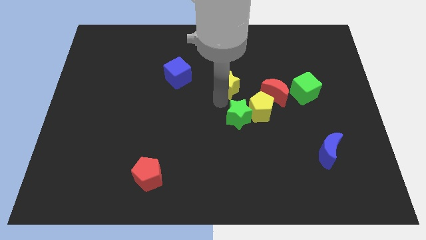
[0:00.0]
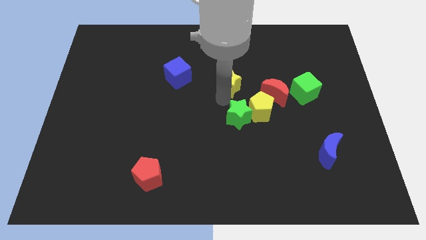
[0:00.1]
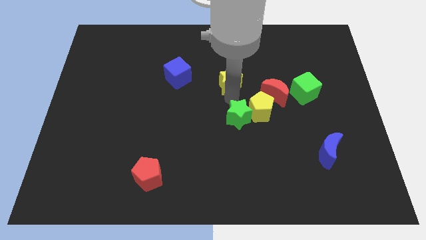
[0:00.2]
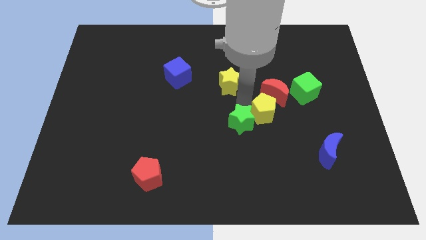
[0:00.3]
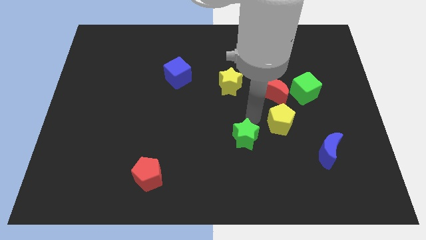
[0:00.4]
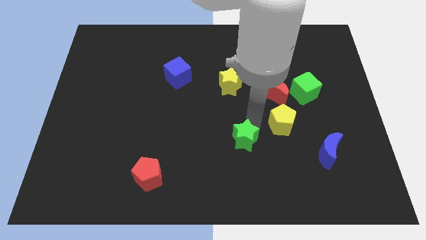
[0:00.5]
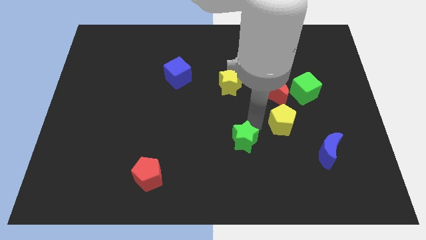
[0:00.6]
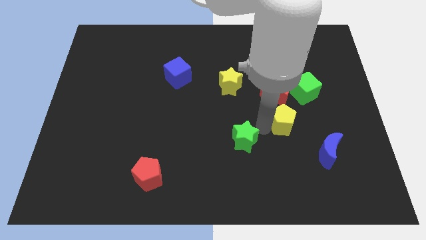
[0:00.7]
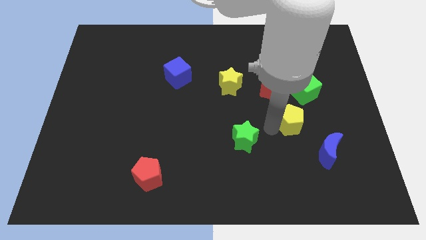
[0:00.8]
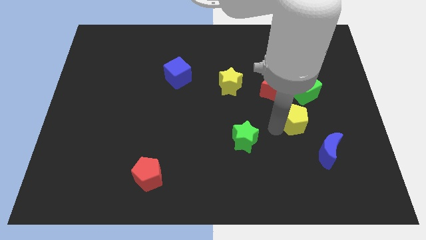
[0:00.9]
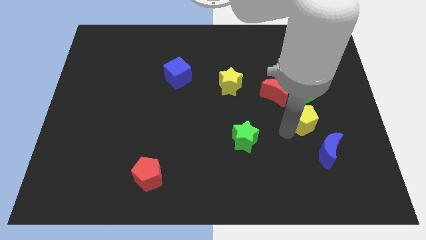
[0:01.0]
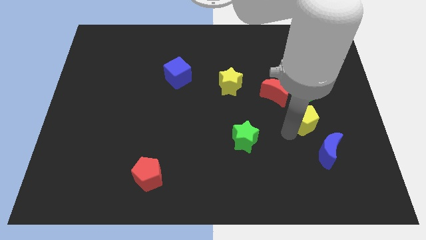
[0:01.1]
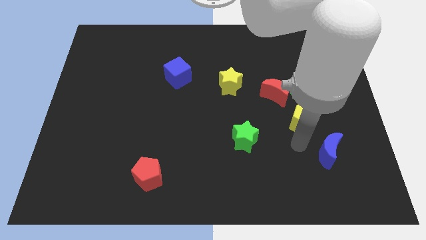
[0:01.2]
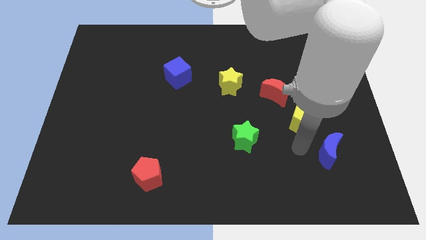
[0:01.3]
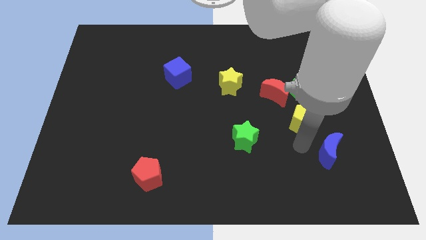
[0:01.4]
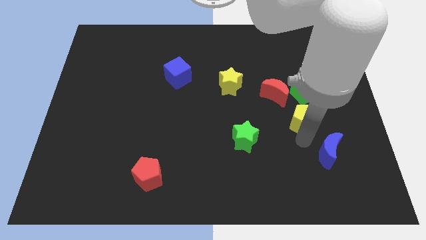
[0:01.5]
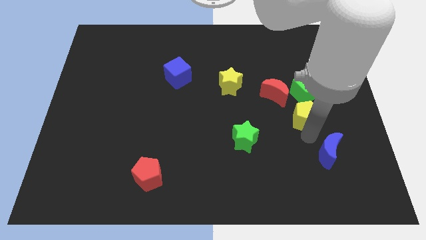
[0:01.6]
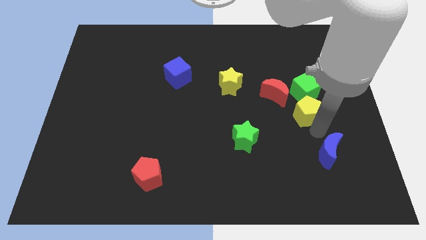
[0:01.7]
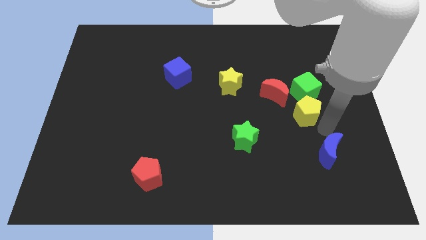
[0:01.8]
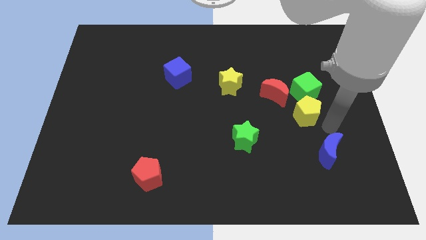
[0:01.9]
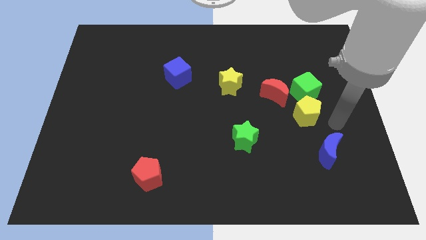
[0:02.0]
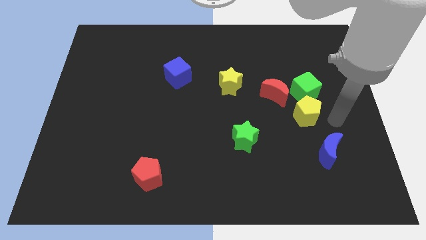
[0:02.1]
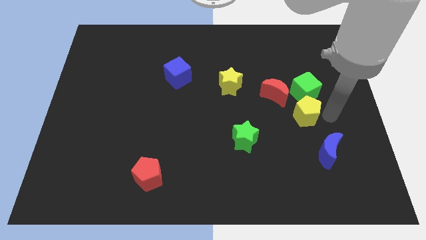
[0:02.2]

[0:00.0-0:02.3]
move yellow pentagon below green cube

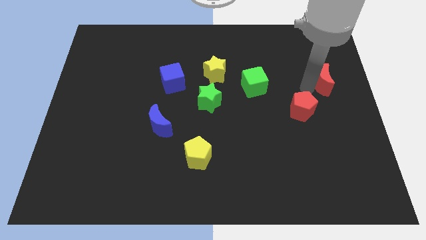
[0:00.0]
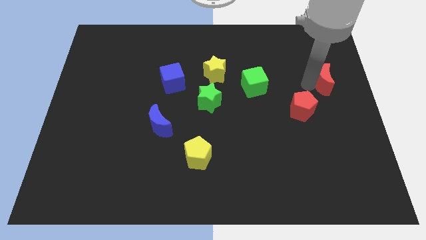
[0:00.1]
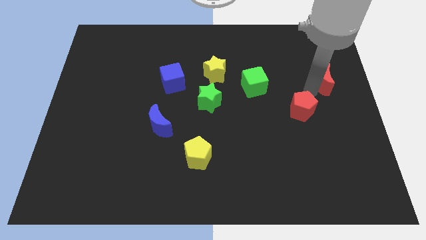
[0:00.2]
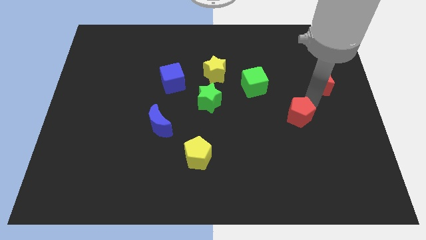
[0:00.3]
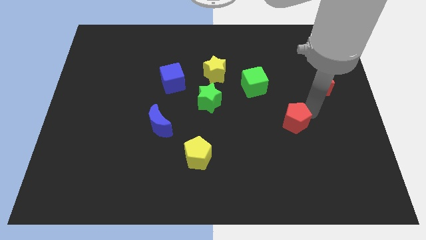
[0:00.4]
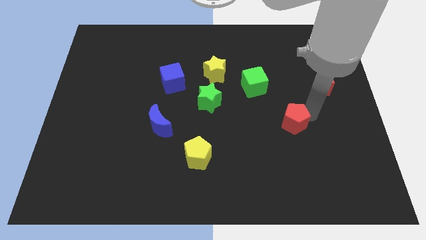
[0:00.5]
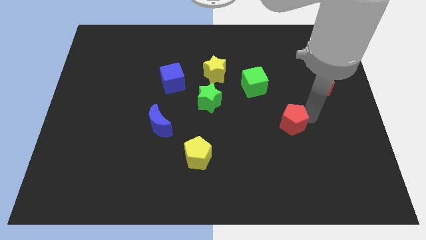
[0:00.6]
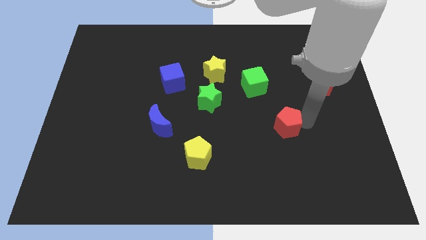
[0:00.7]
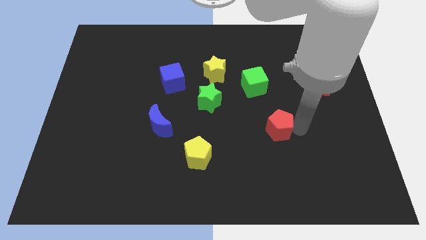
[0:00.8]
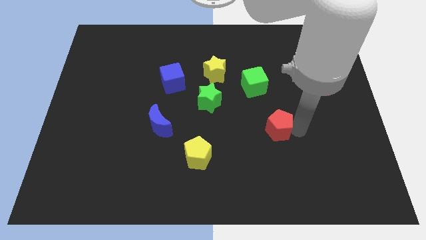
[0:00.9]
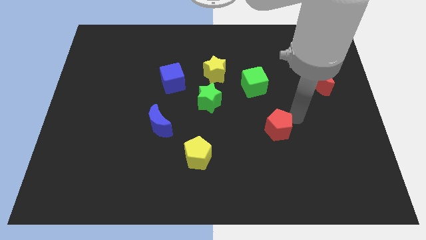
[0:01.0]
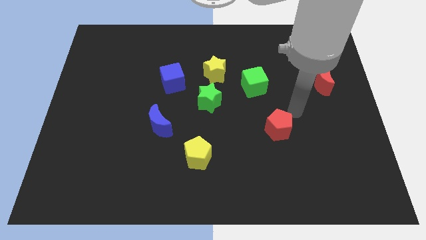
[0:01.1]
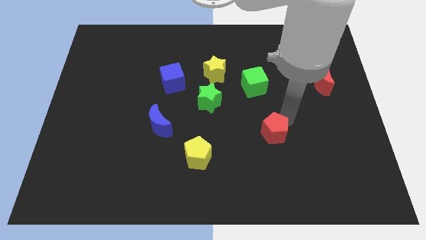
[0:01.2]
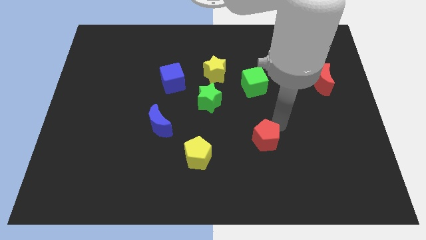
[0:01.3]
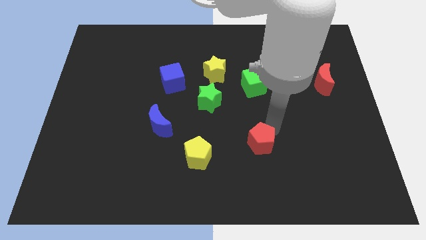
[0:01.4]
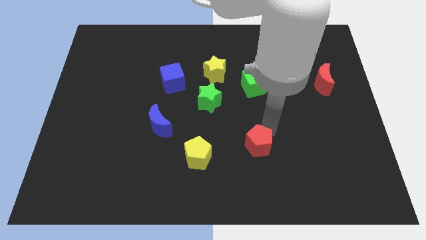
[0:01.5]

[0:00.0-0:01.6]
move the red pentagon towards the right of the yellow pentagon bottom of the board

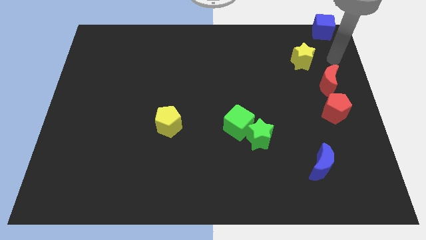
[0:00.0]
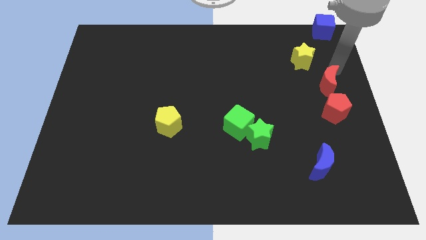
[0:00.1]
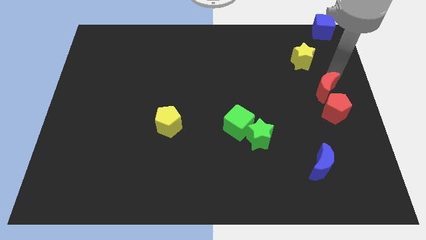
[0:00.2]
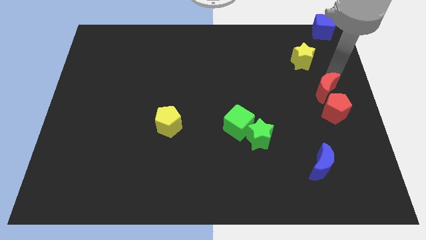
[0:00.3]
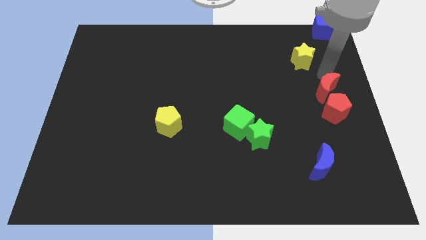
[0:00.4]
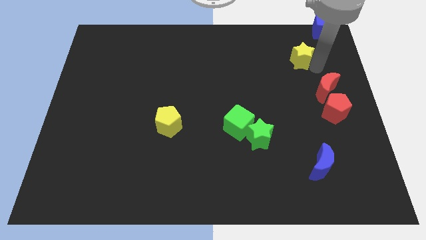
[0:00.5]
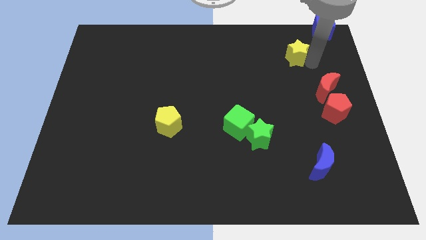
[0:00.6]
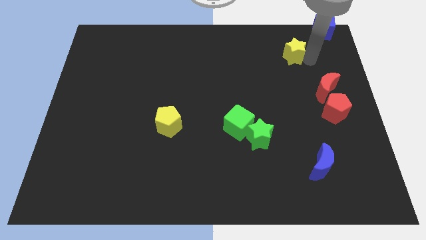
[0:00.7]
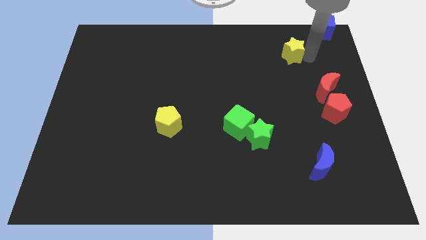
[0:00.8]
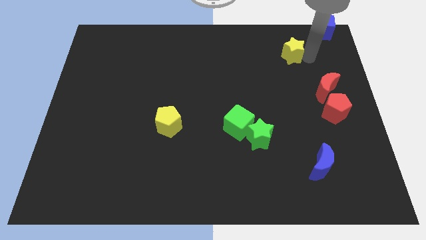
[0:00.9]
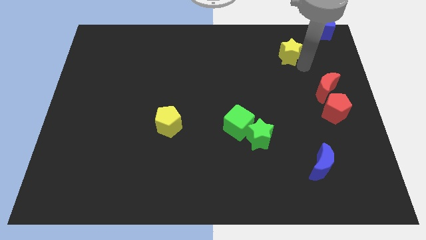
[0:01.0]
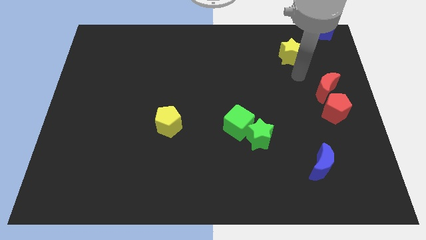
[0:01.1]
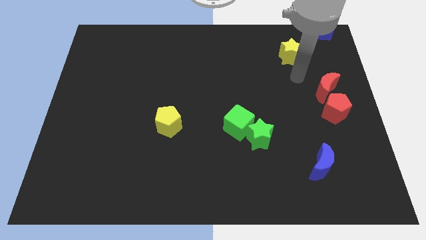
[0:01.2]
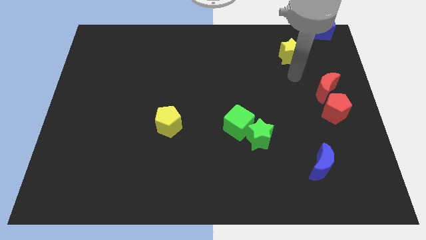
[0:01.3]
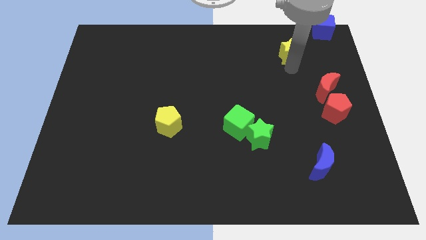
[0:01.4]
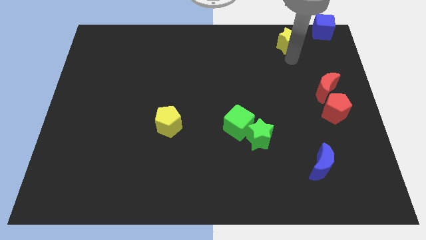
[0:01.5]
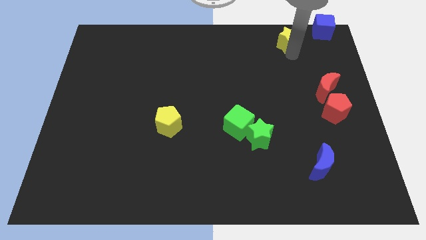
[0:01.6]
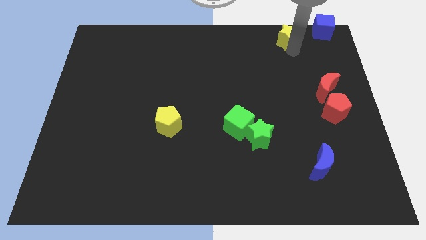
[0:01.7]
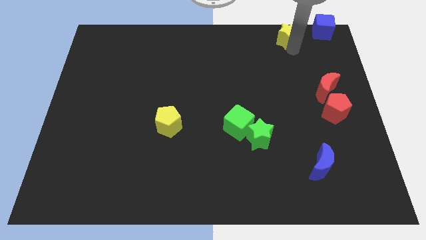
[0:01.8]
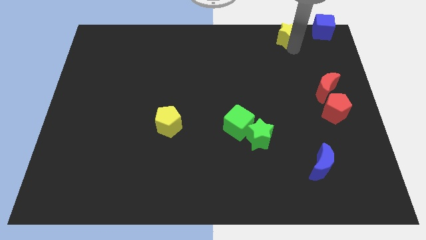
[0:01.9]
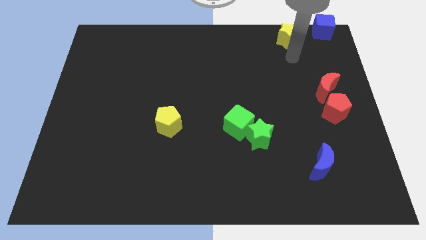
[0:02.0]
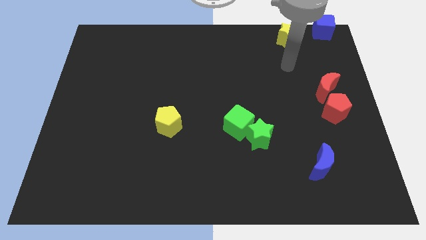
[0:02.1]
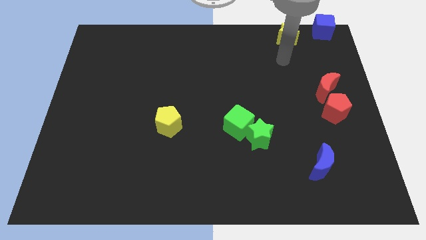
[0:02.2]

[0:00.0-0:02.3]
move the yellow star to the bottom left blue cube

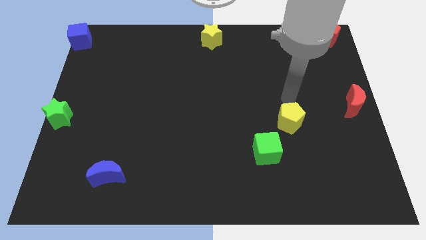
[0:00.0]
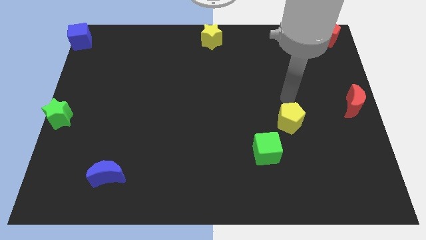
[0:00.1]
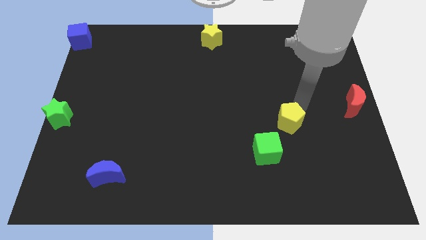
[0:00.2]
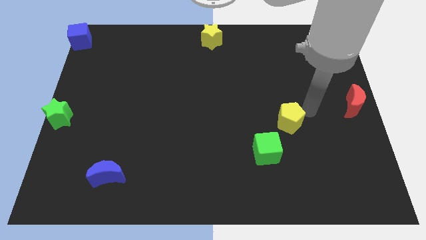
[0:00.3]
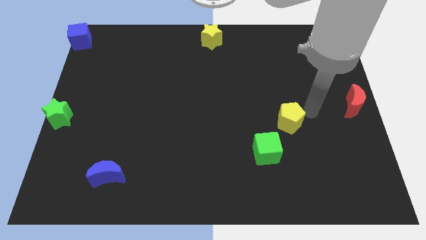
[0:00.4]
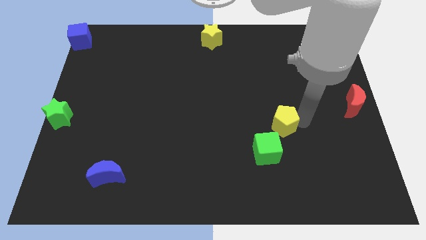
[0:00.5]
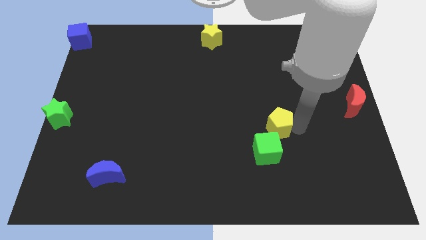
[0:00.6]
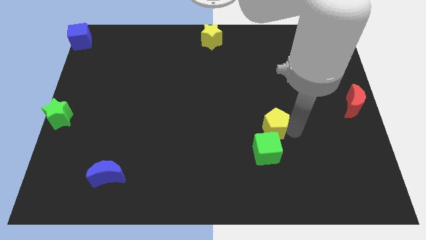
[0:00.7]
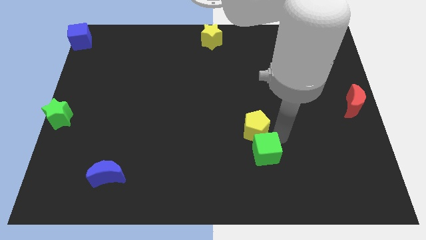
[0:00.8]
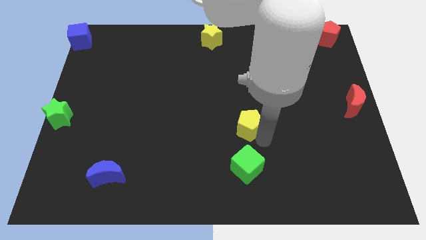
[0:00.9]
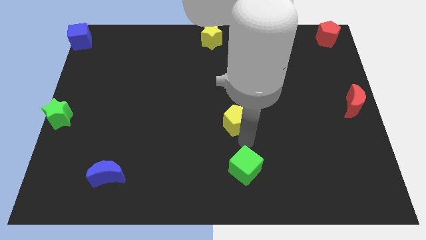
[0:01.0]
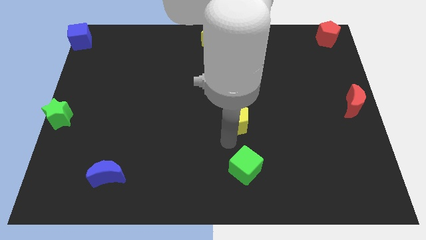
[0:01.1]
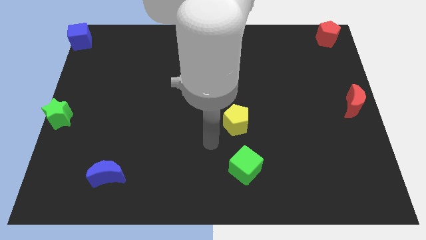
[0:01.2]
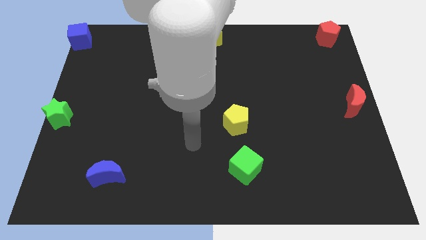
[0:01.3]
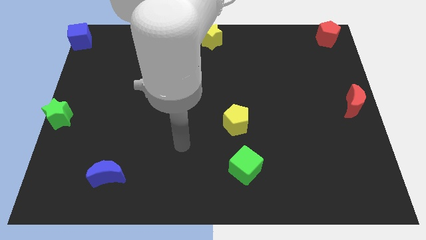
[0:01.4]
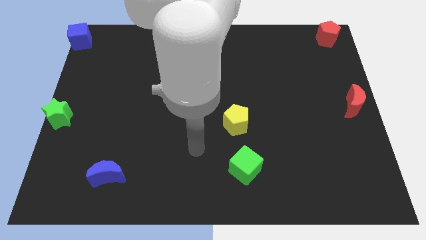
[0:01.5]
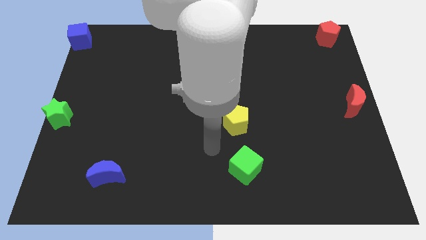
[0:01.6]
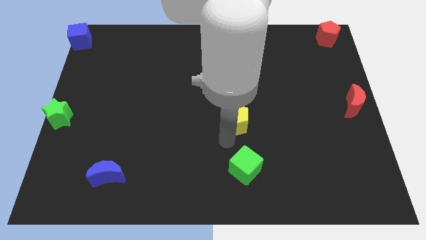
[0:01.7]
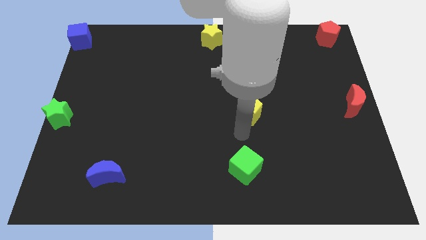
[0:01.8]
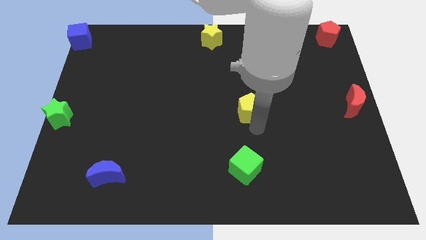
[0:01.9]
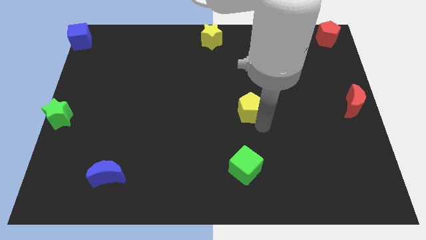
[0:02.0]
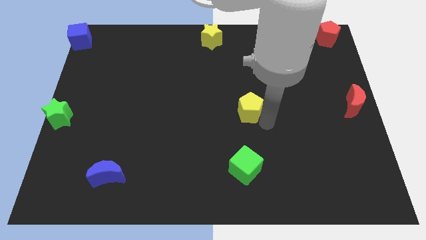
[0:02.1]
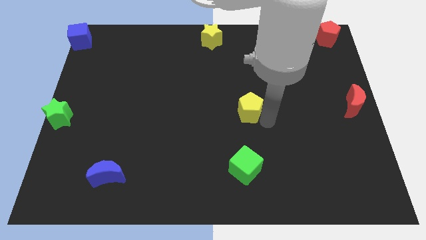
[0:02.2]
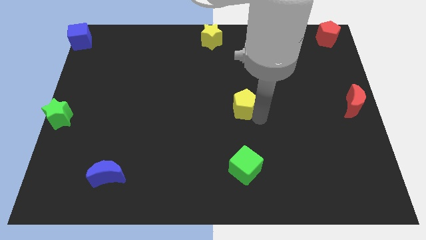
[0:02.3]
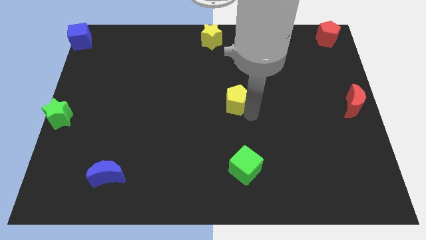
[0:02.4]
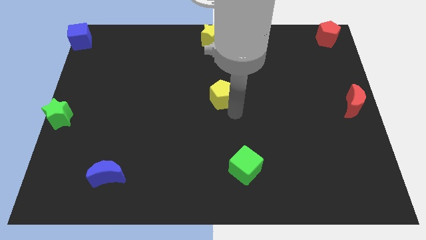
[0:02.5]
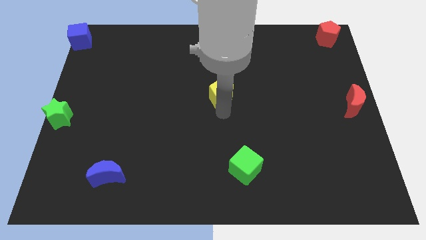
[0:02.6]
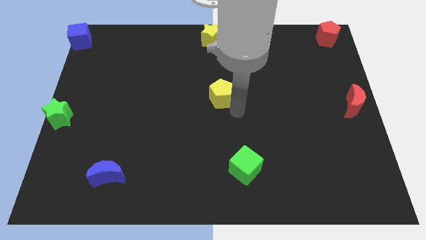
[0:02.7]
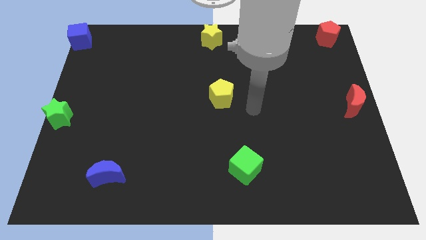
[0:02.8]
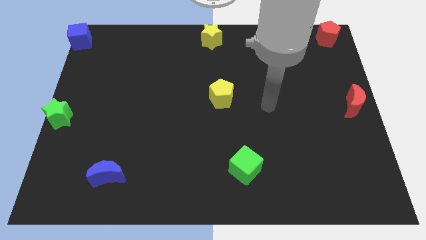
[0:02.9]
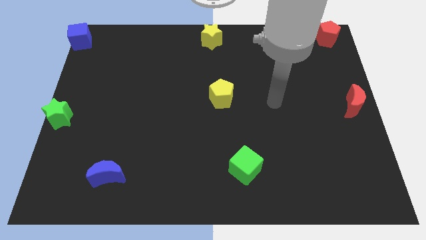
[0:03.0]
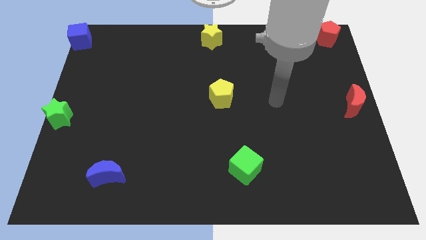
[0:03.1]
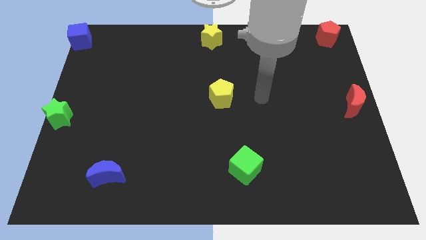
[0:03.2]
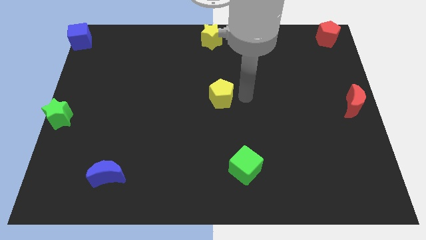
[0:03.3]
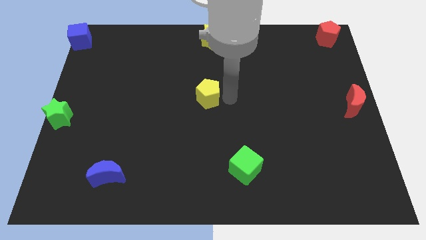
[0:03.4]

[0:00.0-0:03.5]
move yellow pentagon to the centre of the board
